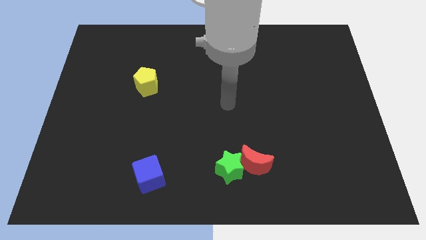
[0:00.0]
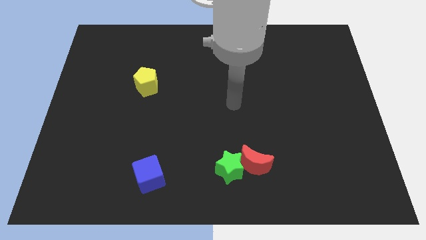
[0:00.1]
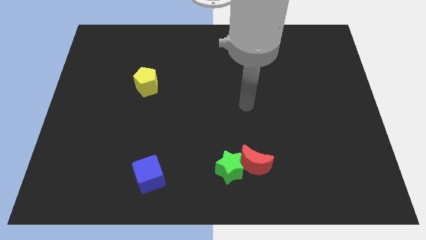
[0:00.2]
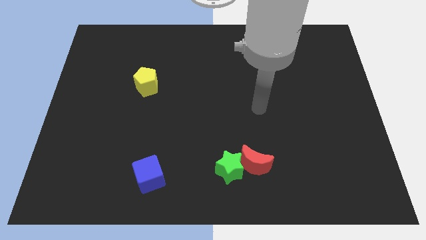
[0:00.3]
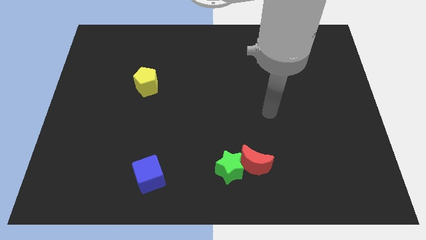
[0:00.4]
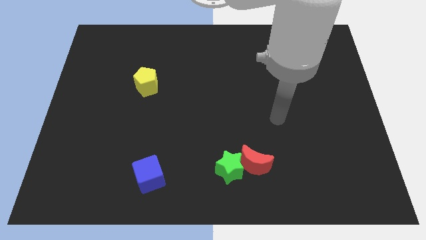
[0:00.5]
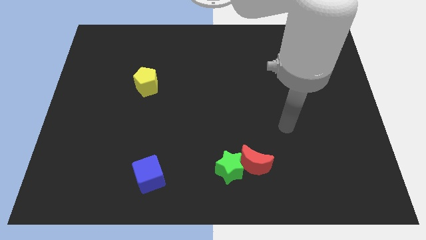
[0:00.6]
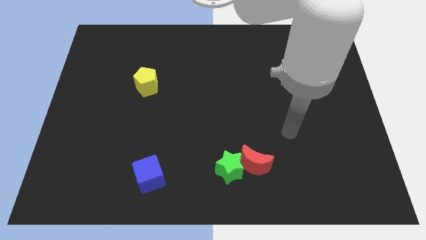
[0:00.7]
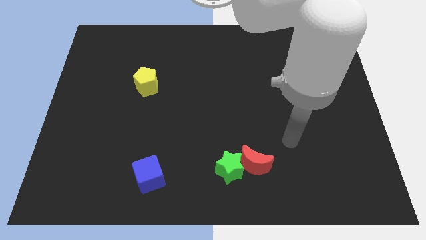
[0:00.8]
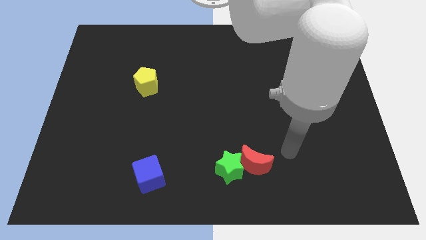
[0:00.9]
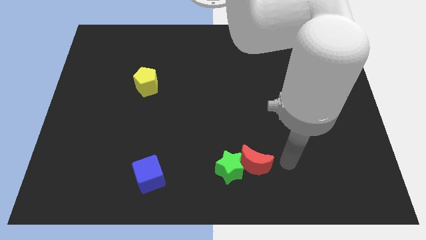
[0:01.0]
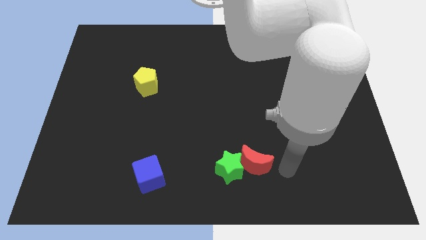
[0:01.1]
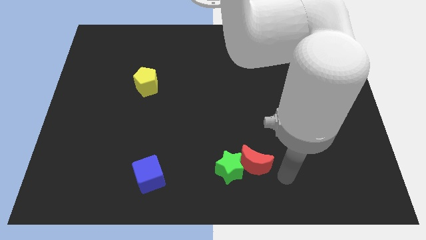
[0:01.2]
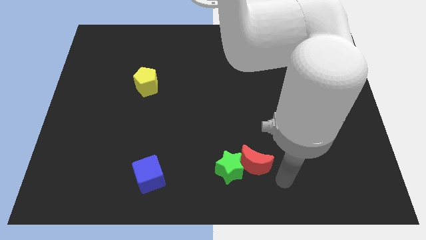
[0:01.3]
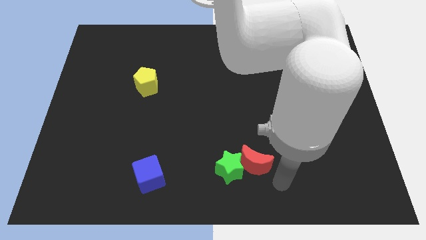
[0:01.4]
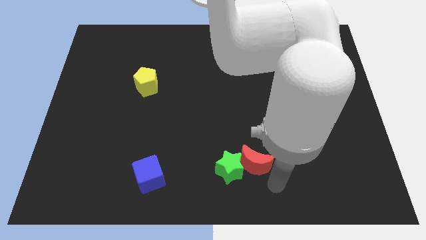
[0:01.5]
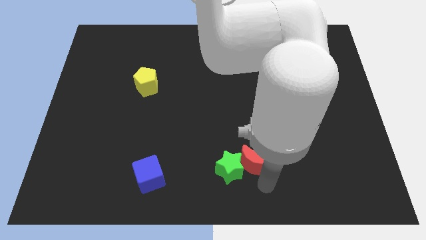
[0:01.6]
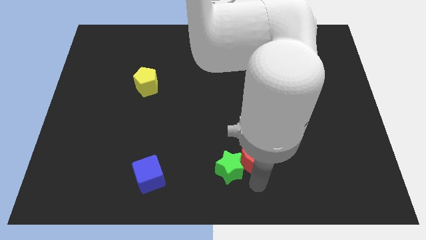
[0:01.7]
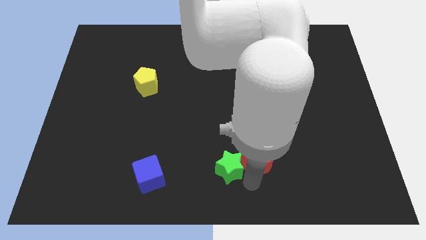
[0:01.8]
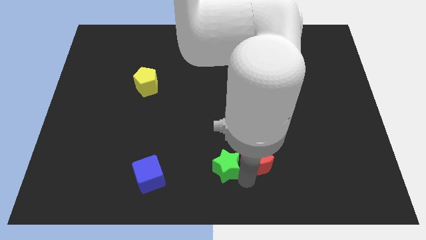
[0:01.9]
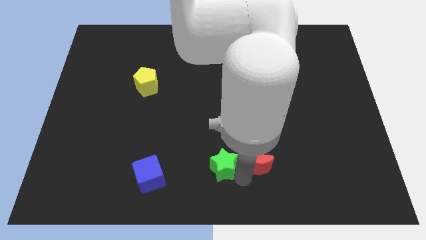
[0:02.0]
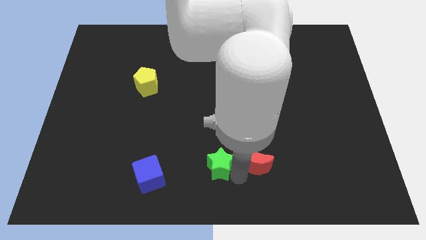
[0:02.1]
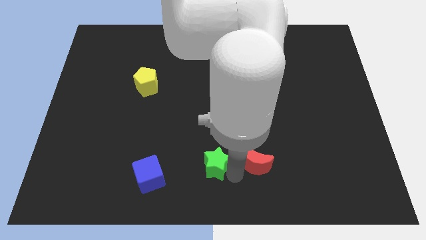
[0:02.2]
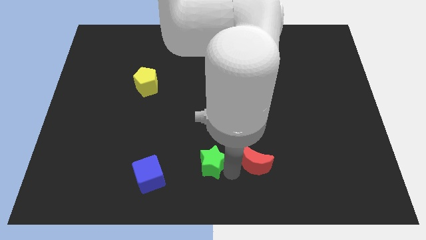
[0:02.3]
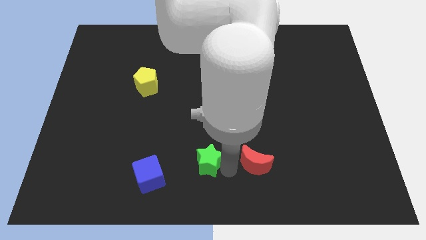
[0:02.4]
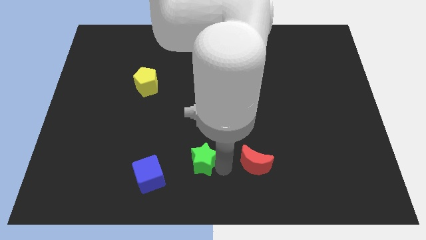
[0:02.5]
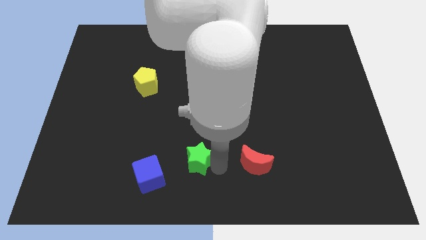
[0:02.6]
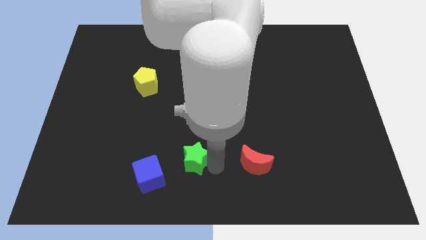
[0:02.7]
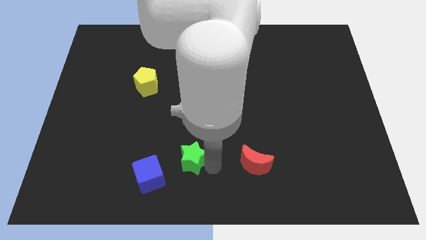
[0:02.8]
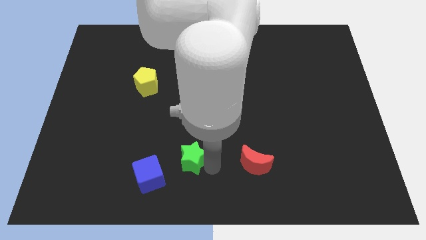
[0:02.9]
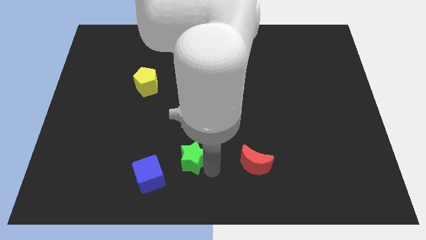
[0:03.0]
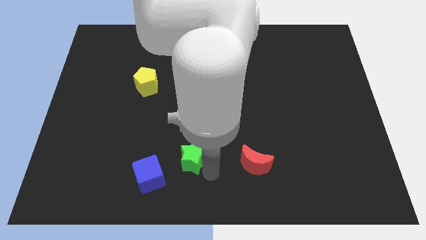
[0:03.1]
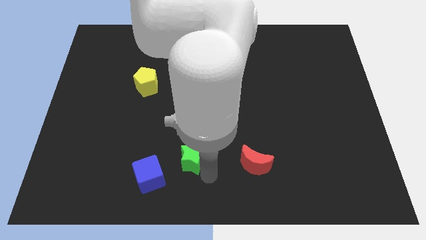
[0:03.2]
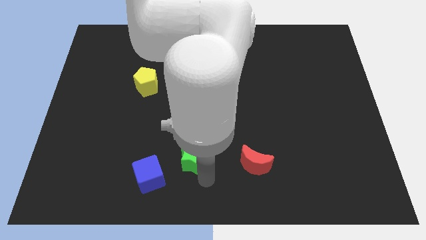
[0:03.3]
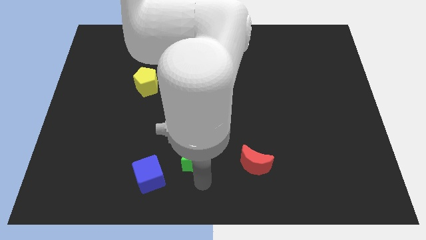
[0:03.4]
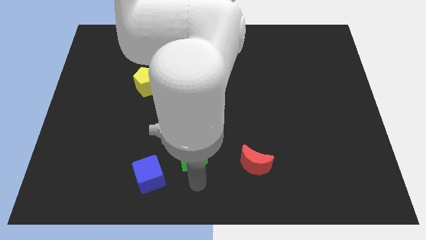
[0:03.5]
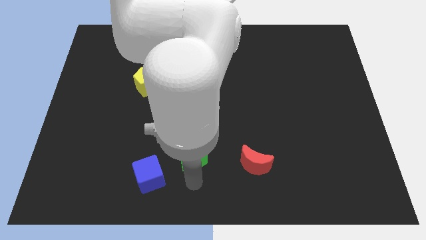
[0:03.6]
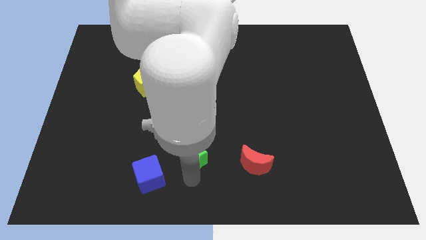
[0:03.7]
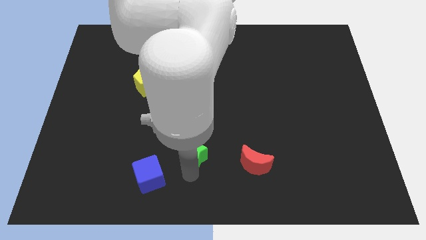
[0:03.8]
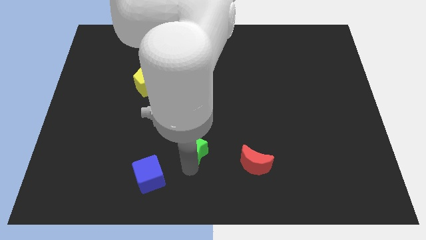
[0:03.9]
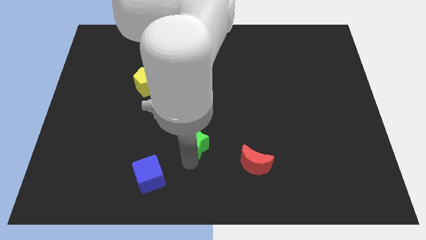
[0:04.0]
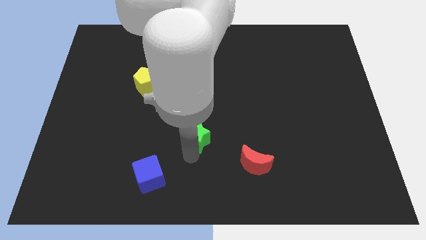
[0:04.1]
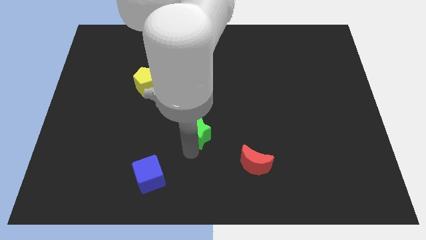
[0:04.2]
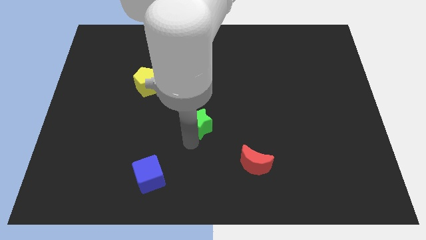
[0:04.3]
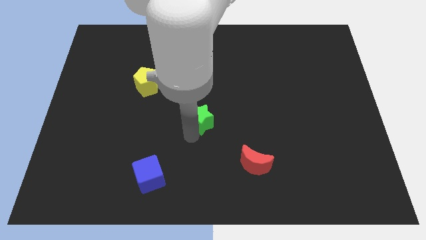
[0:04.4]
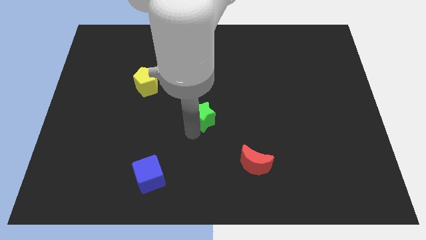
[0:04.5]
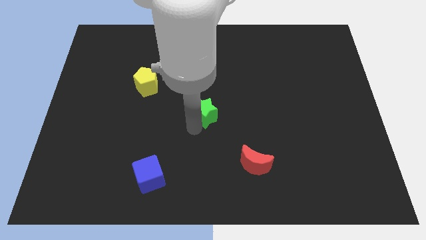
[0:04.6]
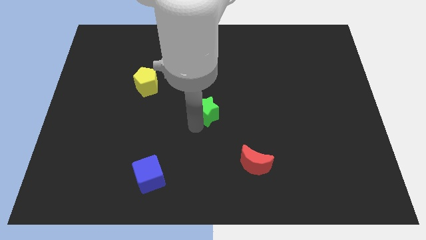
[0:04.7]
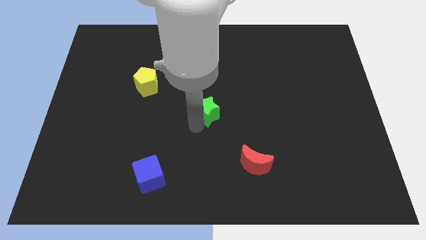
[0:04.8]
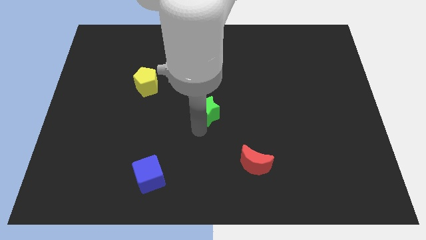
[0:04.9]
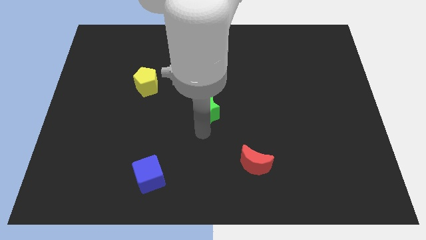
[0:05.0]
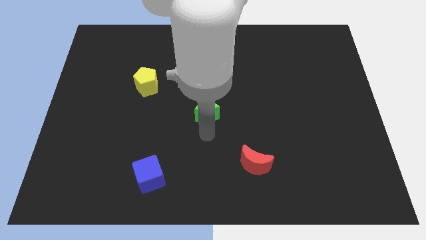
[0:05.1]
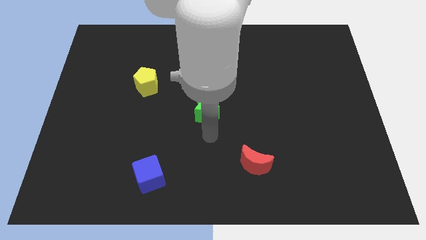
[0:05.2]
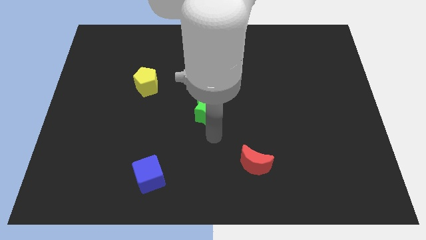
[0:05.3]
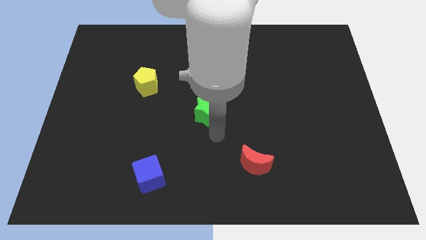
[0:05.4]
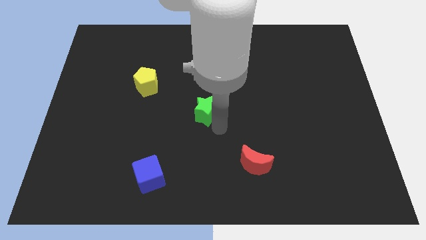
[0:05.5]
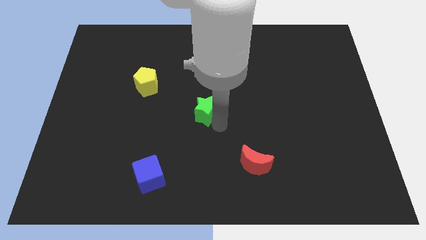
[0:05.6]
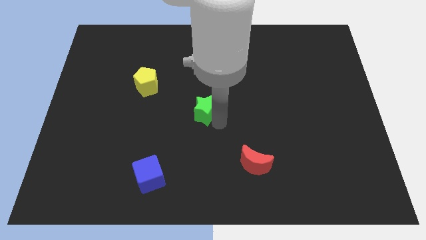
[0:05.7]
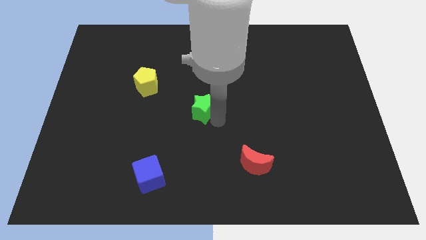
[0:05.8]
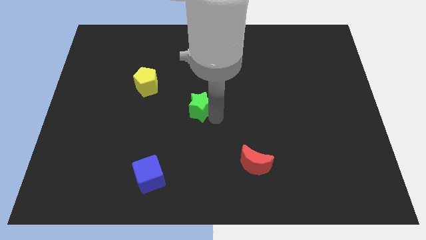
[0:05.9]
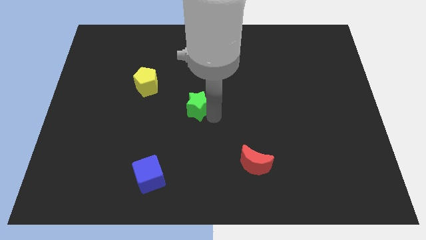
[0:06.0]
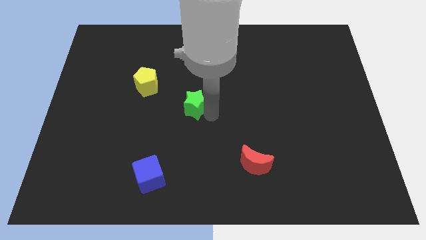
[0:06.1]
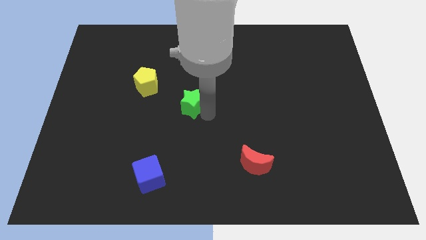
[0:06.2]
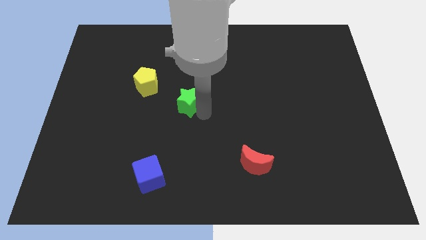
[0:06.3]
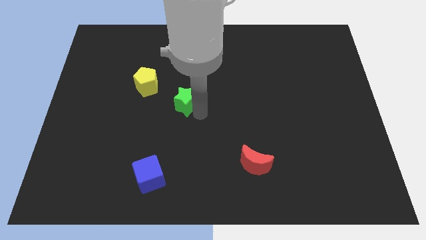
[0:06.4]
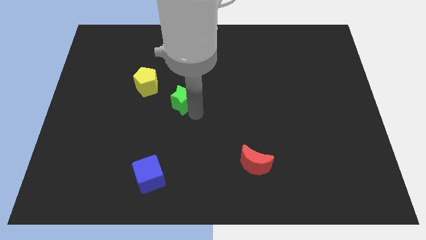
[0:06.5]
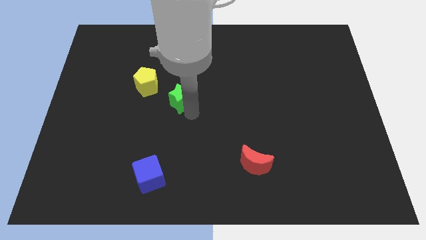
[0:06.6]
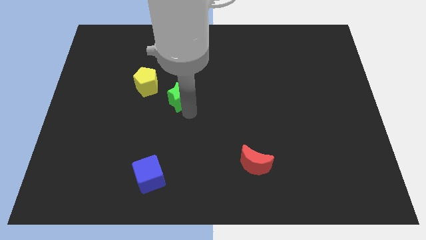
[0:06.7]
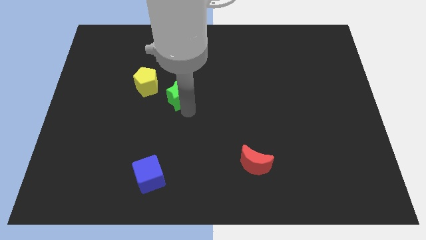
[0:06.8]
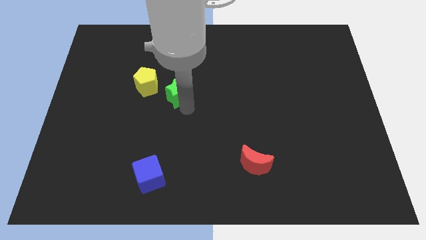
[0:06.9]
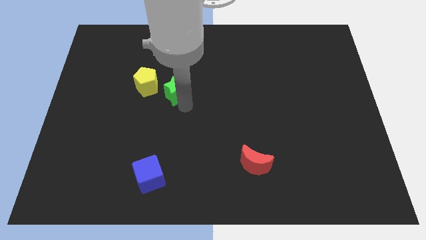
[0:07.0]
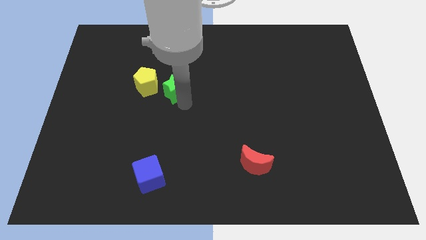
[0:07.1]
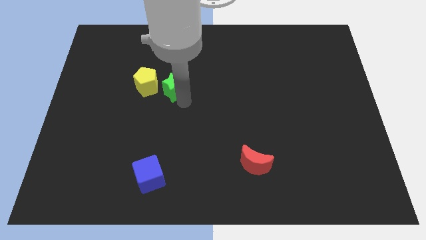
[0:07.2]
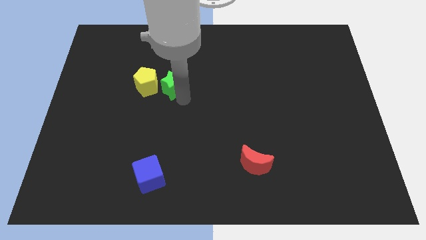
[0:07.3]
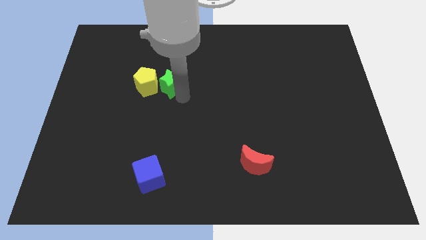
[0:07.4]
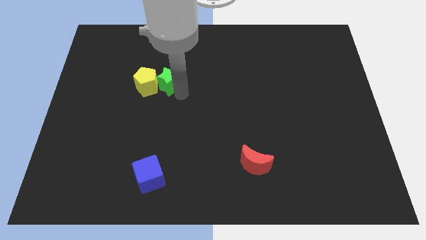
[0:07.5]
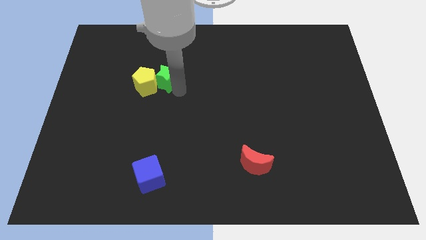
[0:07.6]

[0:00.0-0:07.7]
put the green block to the yellow block

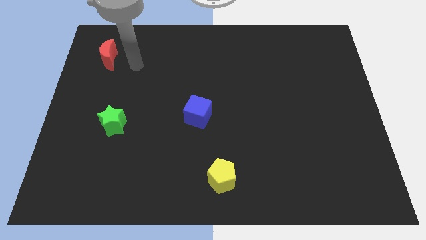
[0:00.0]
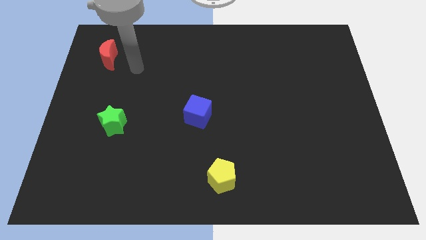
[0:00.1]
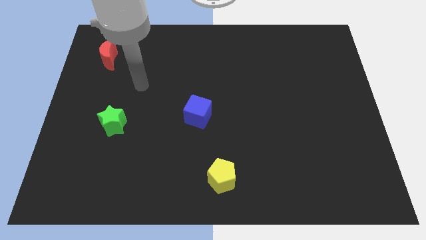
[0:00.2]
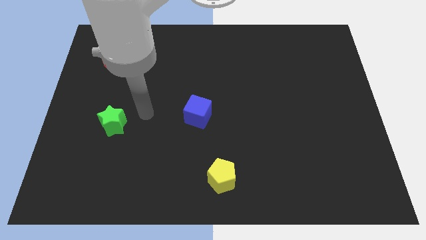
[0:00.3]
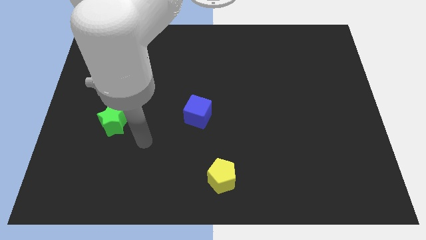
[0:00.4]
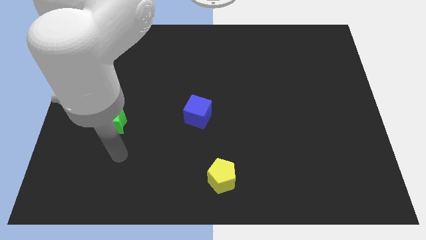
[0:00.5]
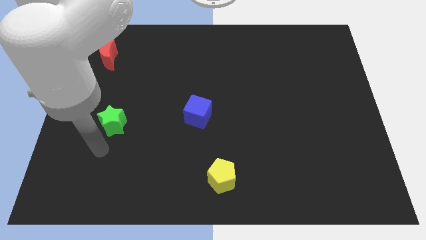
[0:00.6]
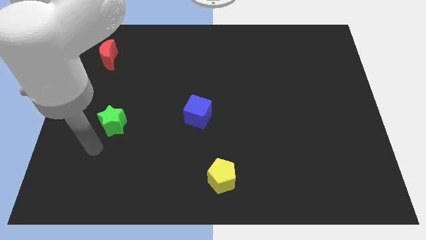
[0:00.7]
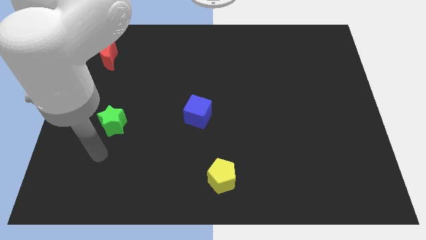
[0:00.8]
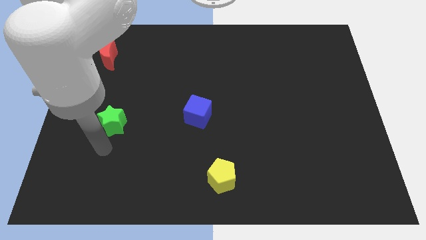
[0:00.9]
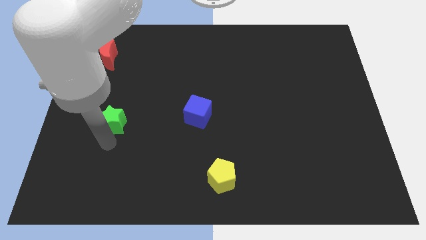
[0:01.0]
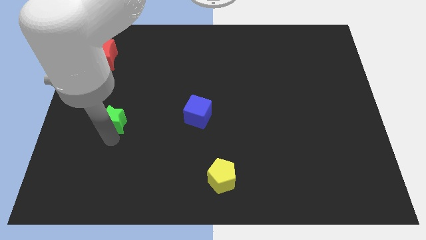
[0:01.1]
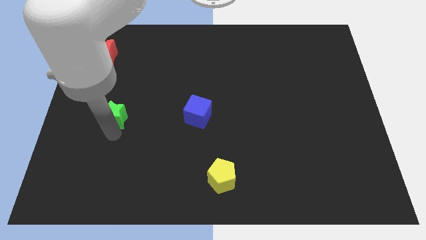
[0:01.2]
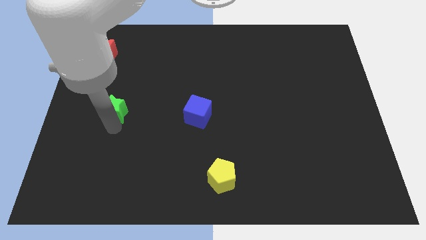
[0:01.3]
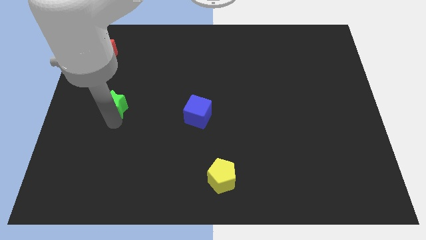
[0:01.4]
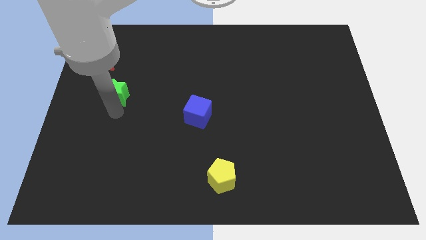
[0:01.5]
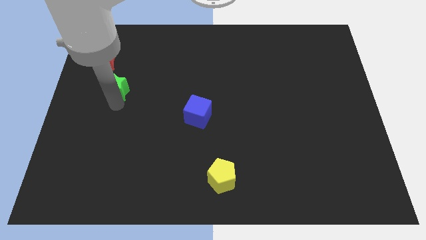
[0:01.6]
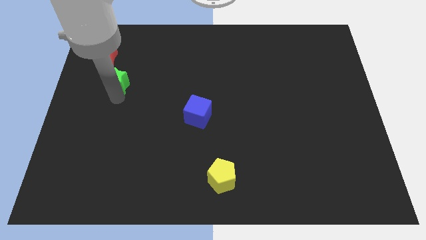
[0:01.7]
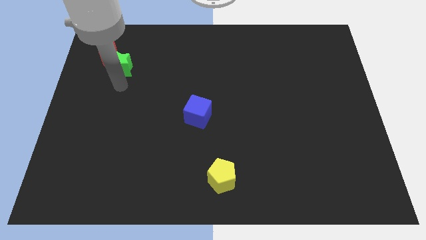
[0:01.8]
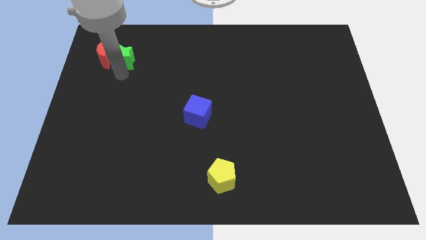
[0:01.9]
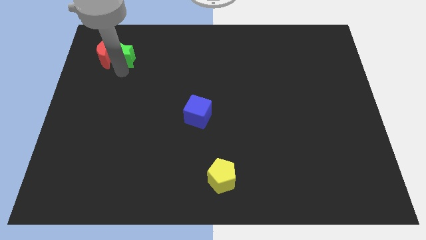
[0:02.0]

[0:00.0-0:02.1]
slide the green star next to the red block
